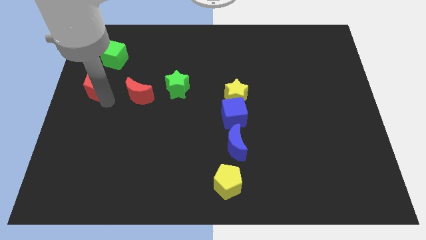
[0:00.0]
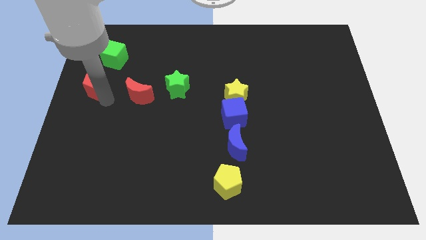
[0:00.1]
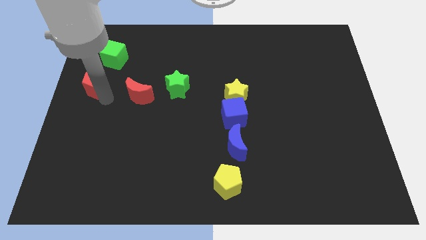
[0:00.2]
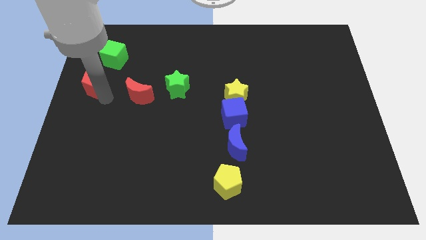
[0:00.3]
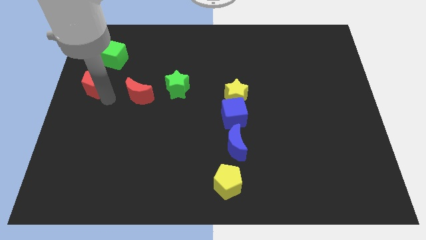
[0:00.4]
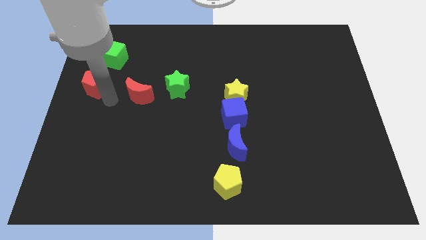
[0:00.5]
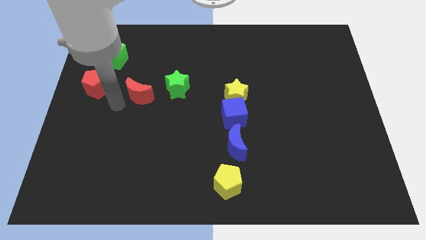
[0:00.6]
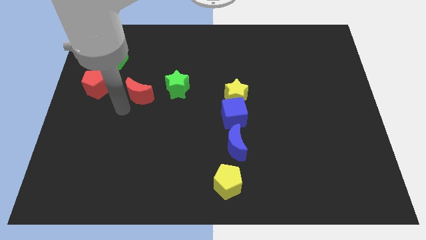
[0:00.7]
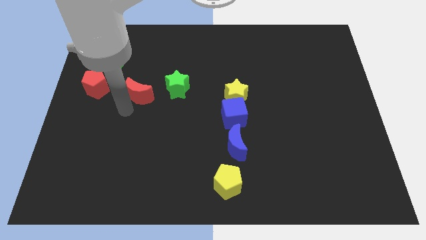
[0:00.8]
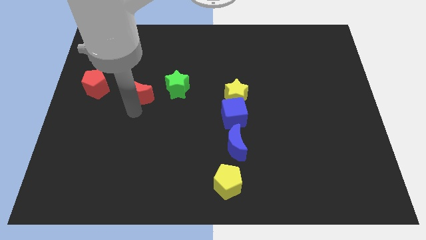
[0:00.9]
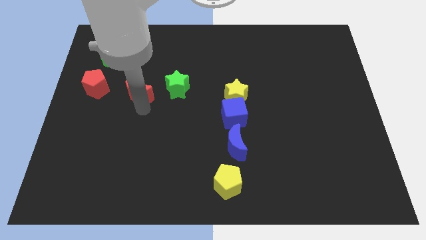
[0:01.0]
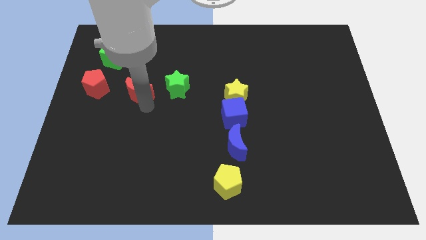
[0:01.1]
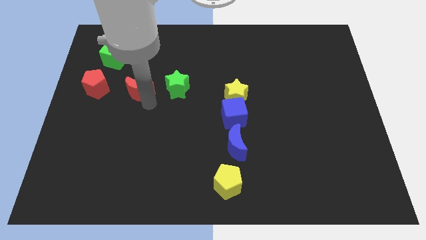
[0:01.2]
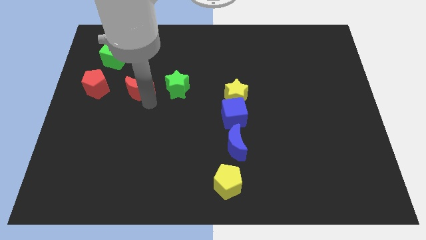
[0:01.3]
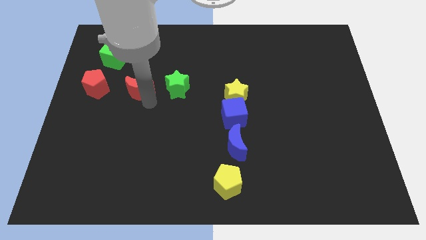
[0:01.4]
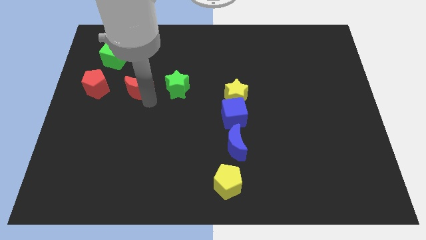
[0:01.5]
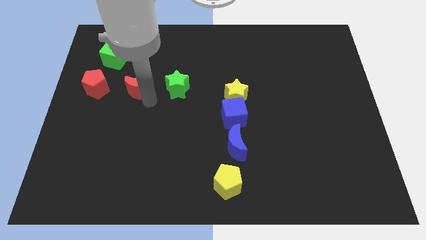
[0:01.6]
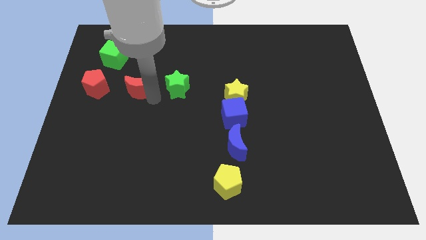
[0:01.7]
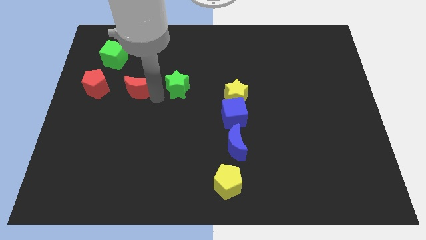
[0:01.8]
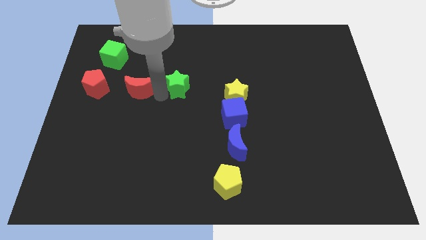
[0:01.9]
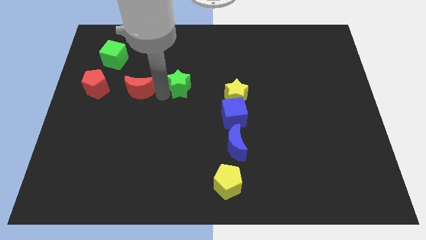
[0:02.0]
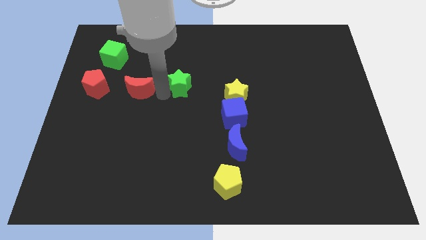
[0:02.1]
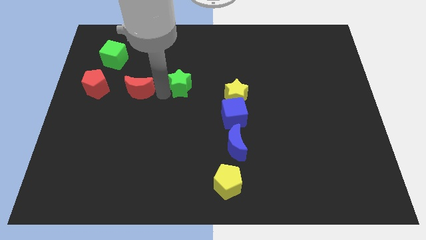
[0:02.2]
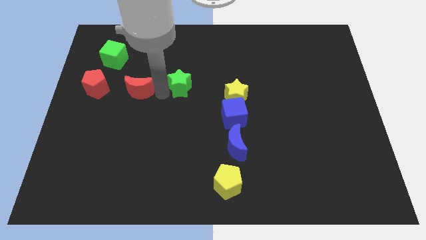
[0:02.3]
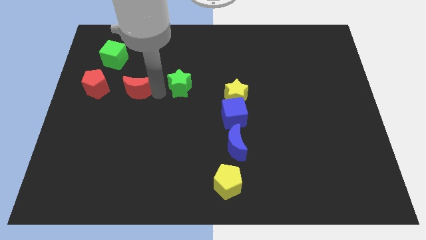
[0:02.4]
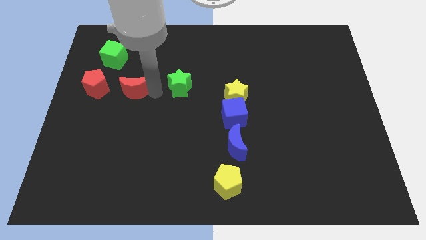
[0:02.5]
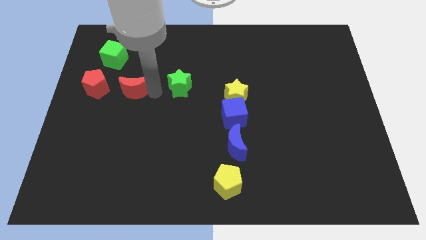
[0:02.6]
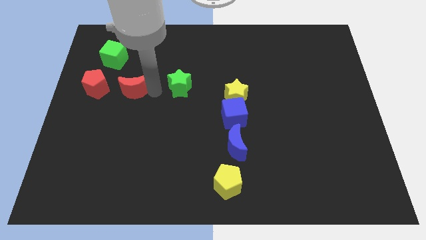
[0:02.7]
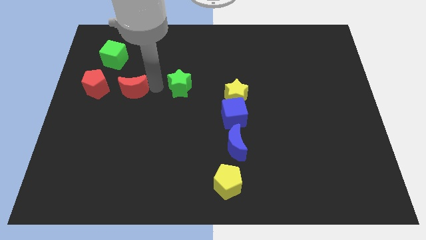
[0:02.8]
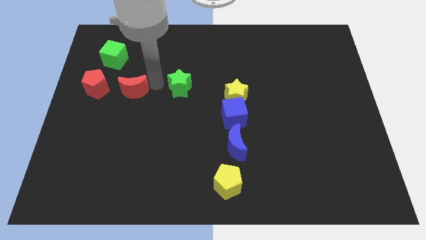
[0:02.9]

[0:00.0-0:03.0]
move the red moon right to the red pentagon

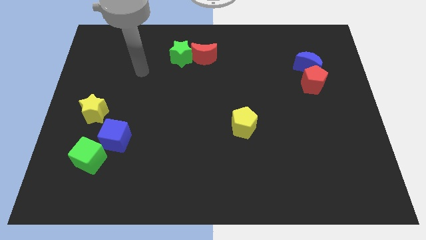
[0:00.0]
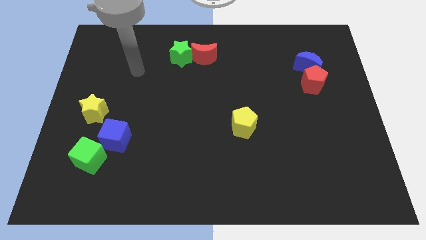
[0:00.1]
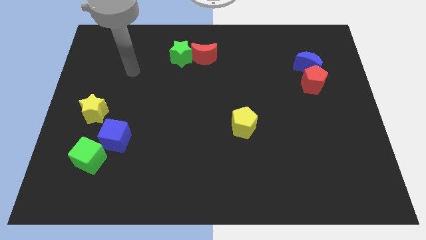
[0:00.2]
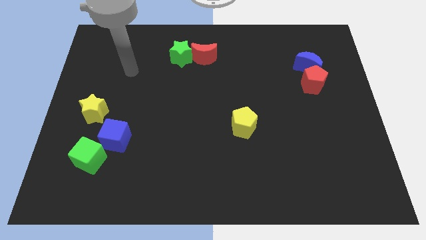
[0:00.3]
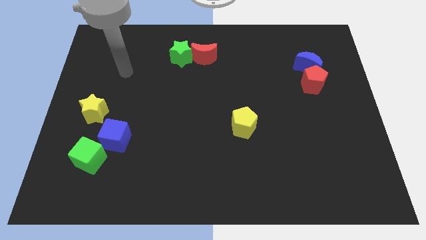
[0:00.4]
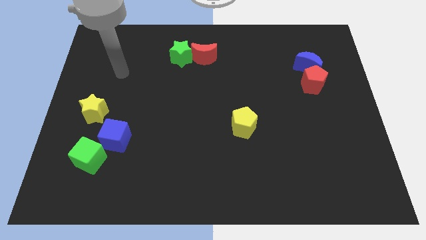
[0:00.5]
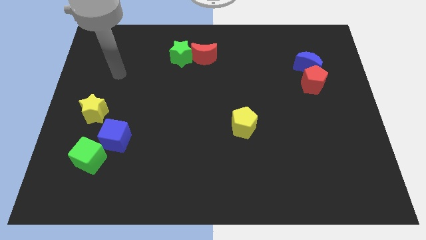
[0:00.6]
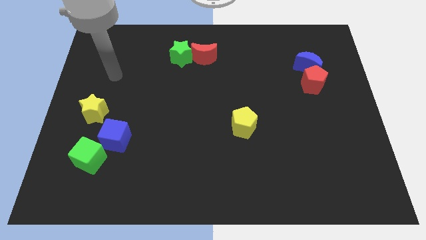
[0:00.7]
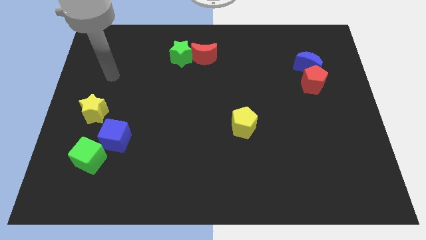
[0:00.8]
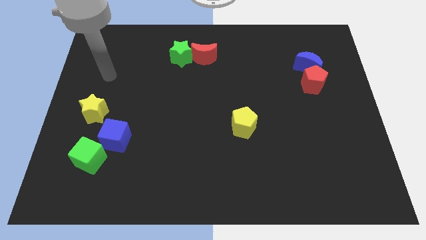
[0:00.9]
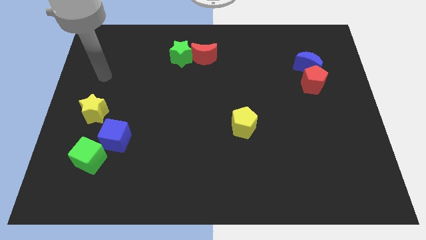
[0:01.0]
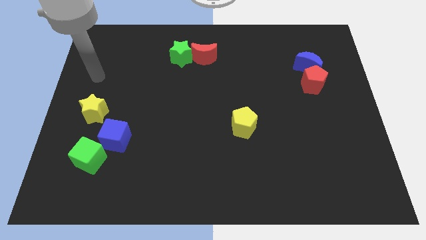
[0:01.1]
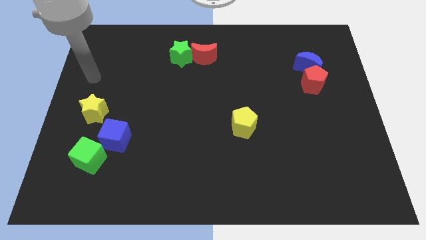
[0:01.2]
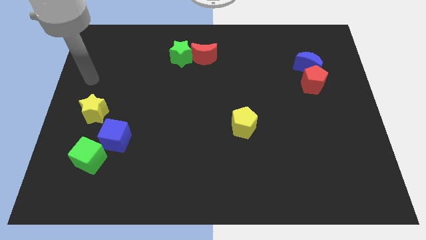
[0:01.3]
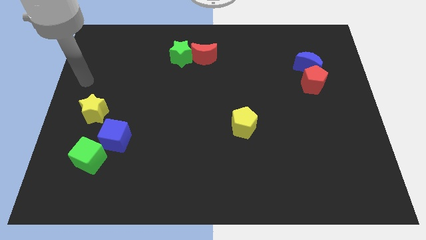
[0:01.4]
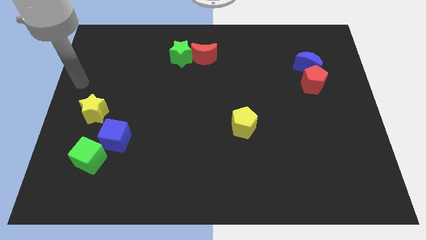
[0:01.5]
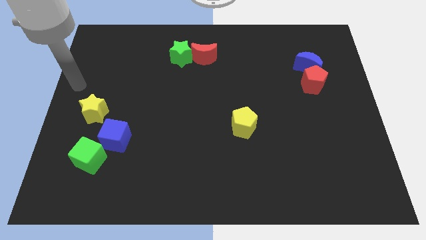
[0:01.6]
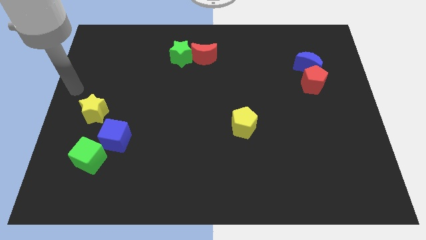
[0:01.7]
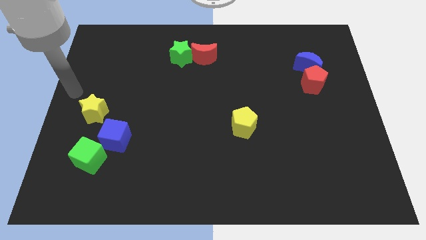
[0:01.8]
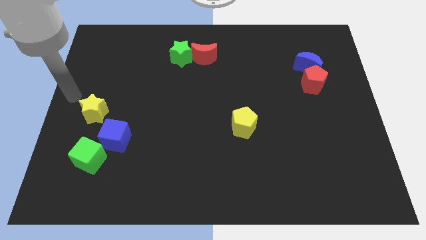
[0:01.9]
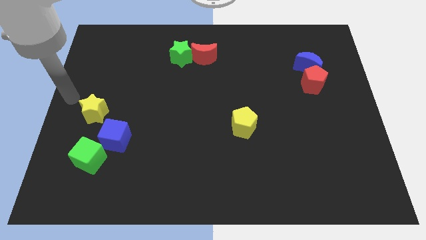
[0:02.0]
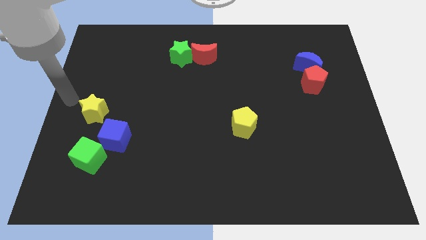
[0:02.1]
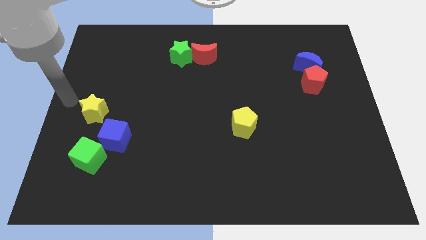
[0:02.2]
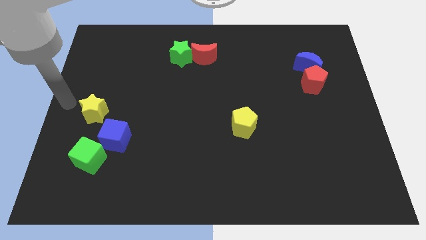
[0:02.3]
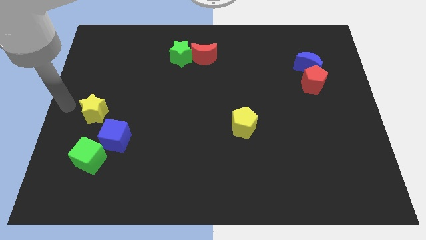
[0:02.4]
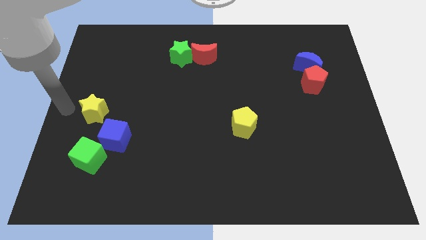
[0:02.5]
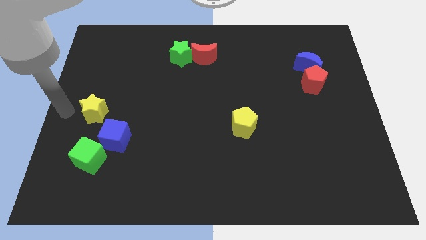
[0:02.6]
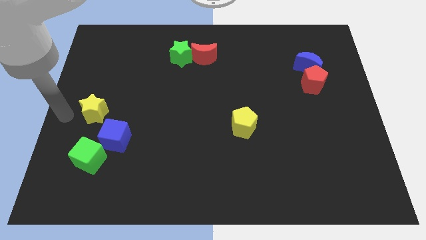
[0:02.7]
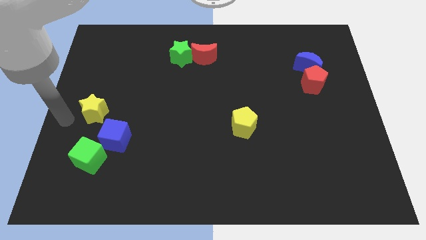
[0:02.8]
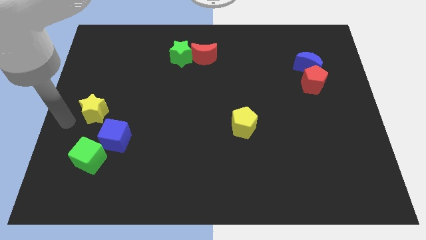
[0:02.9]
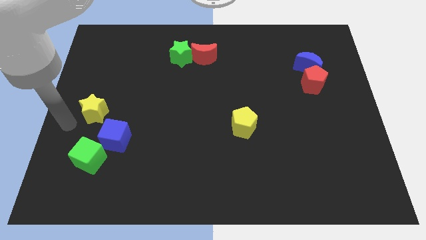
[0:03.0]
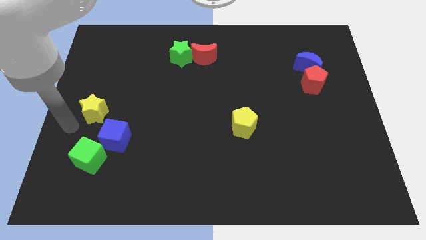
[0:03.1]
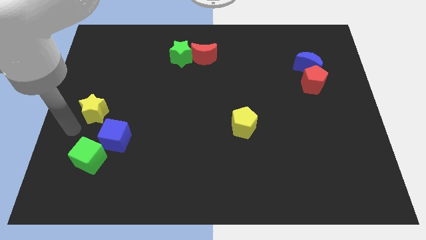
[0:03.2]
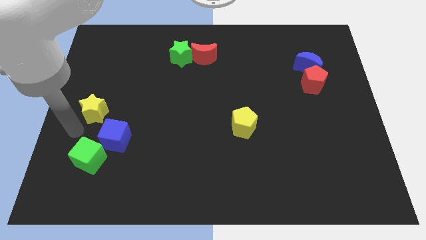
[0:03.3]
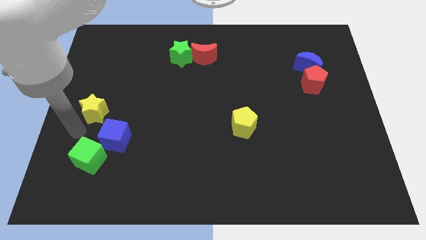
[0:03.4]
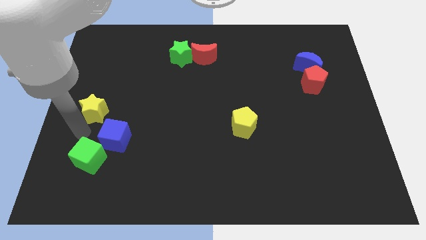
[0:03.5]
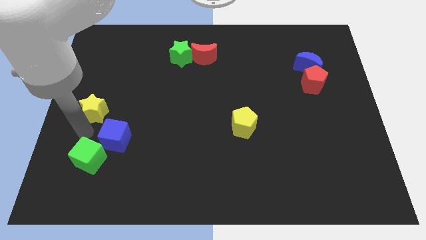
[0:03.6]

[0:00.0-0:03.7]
put the arm below the yellow star

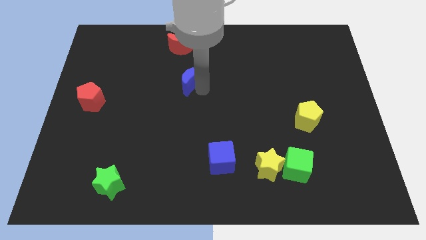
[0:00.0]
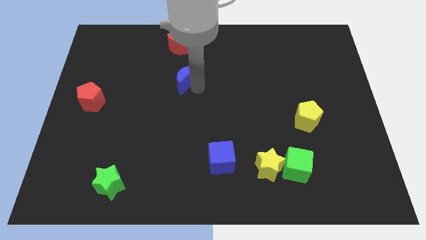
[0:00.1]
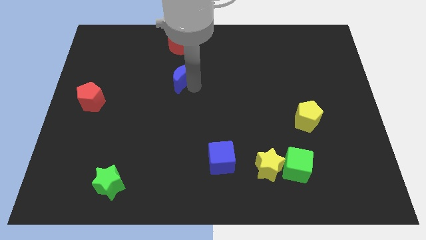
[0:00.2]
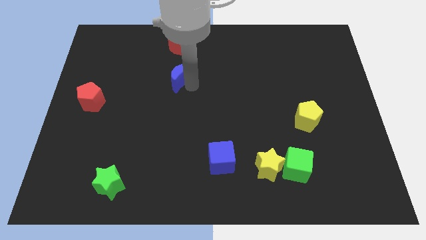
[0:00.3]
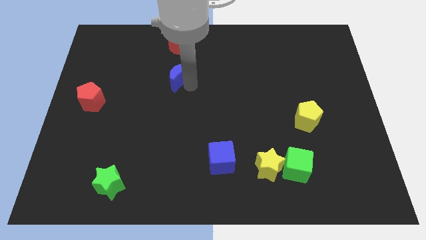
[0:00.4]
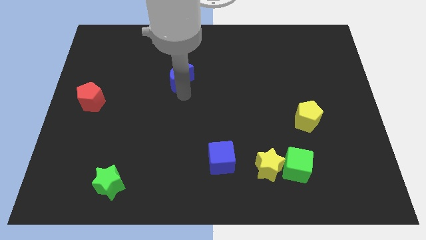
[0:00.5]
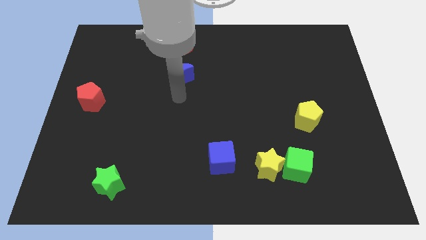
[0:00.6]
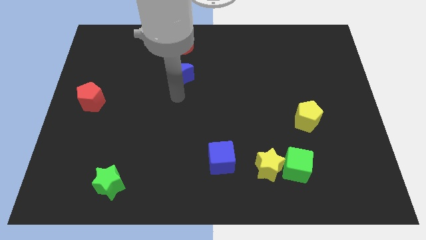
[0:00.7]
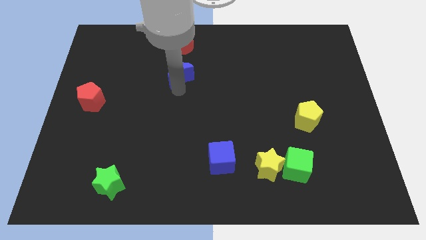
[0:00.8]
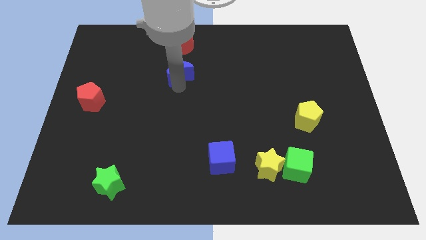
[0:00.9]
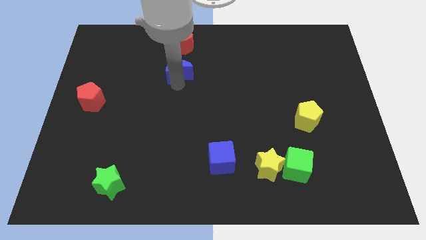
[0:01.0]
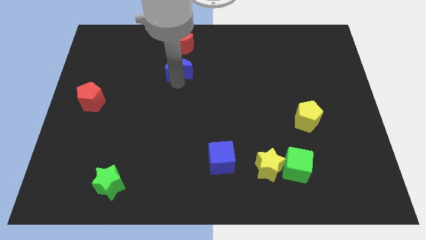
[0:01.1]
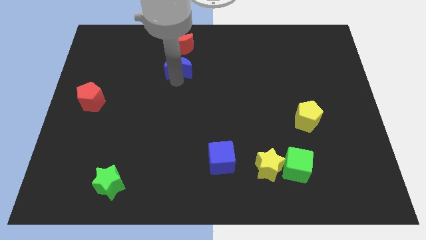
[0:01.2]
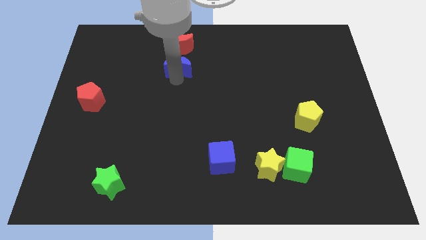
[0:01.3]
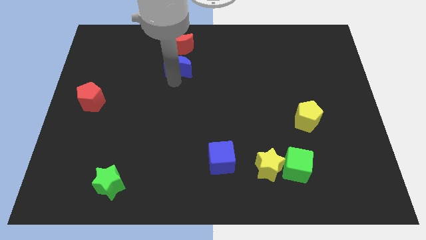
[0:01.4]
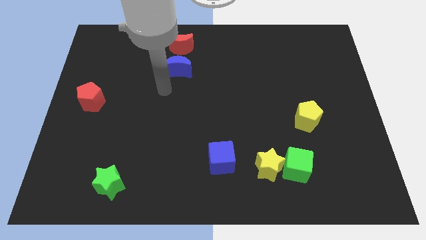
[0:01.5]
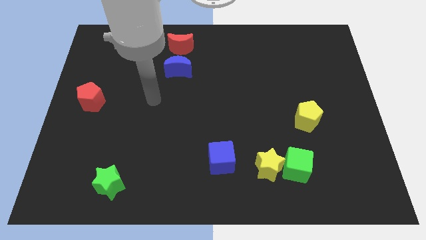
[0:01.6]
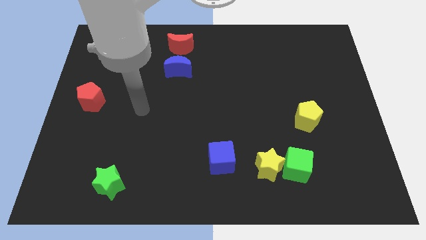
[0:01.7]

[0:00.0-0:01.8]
place the blue crescent below the red crescent

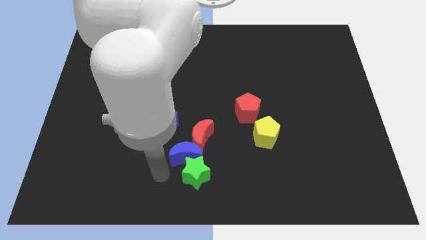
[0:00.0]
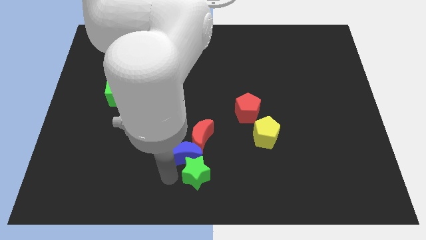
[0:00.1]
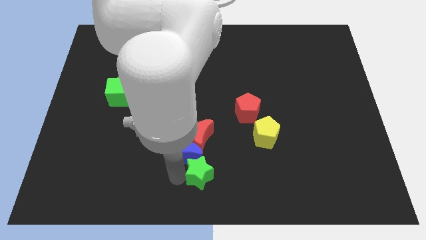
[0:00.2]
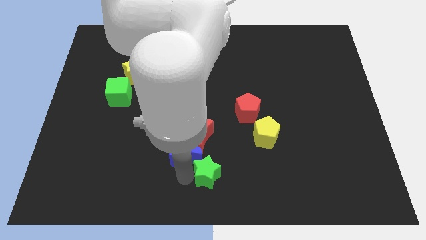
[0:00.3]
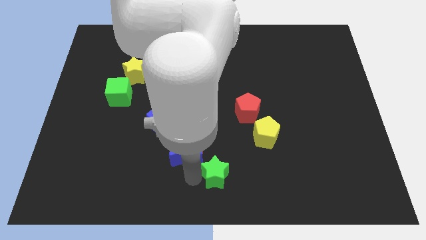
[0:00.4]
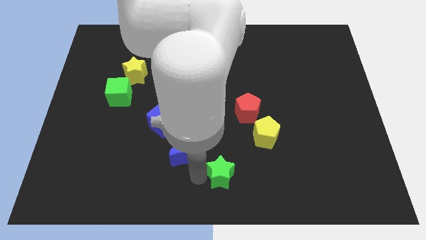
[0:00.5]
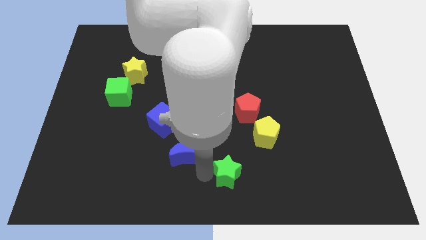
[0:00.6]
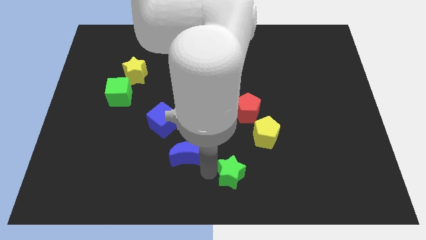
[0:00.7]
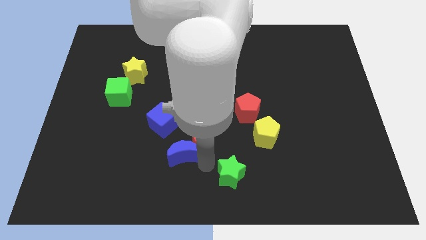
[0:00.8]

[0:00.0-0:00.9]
separate the green star and the blue crescent
